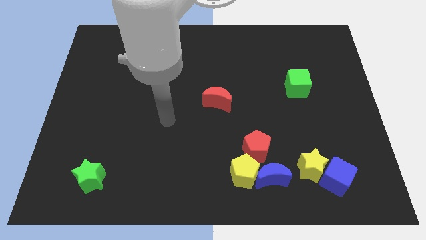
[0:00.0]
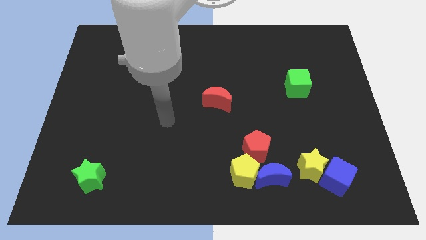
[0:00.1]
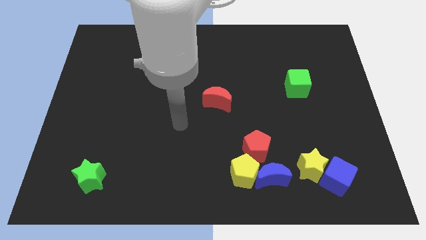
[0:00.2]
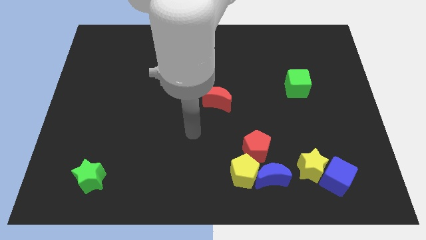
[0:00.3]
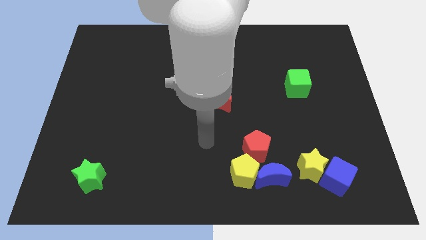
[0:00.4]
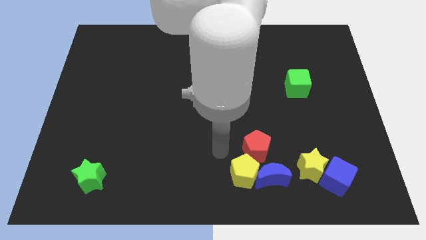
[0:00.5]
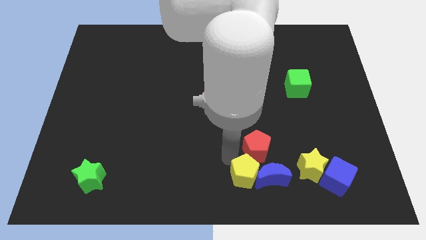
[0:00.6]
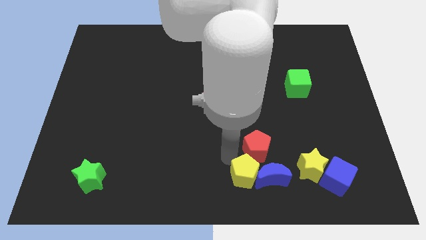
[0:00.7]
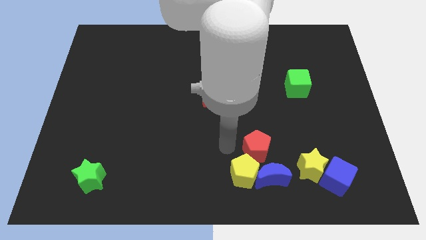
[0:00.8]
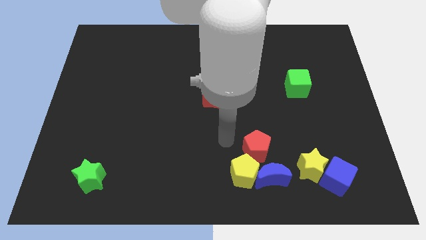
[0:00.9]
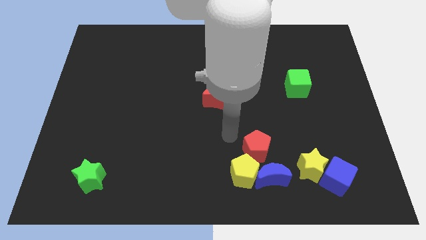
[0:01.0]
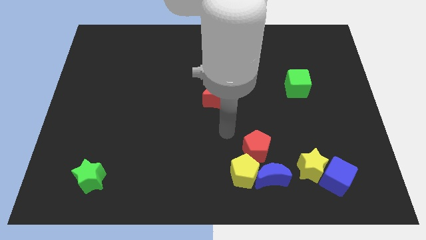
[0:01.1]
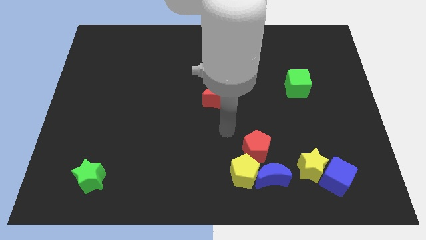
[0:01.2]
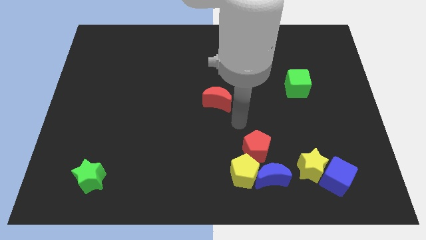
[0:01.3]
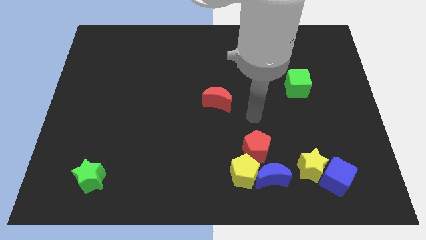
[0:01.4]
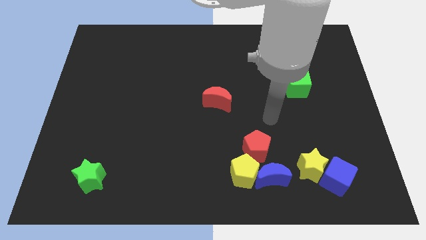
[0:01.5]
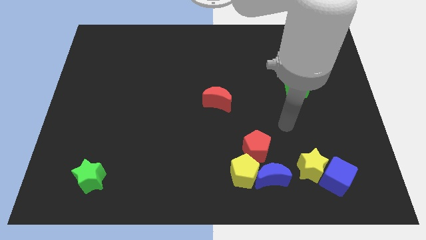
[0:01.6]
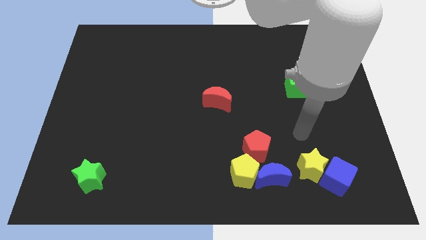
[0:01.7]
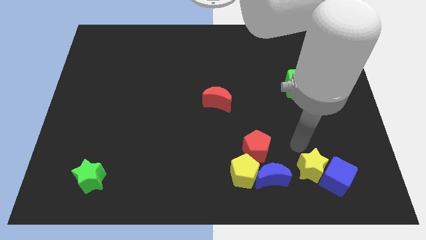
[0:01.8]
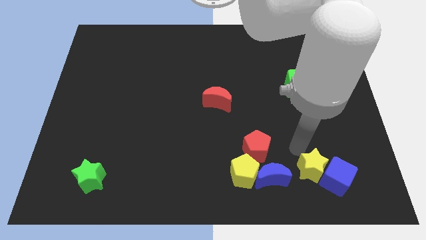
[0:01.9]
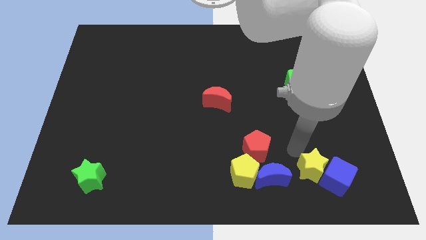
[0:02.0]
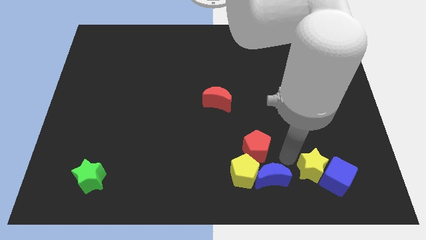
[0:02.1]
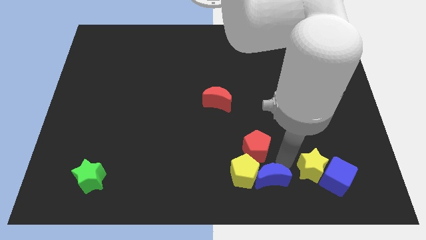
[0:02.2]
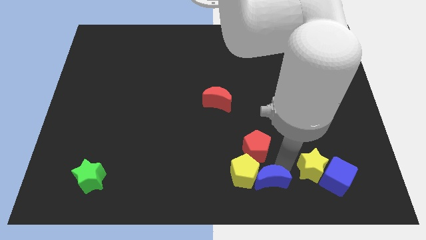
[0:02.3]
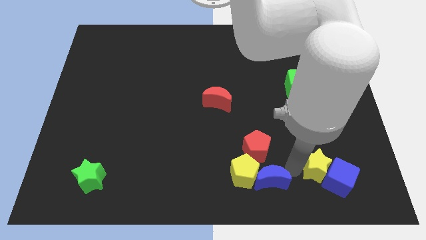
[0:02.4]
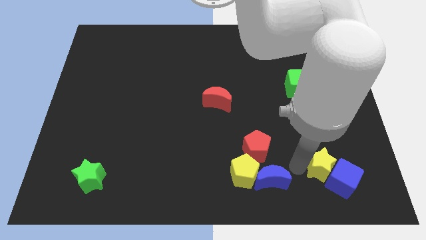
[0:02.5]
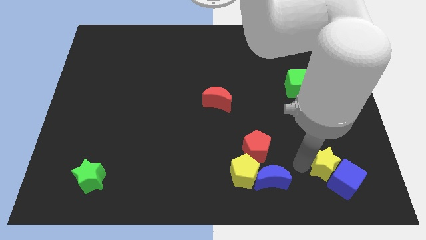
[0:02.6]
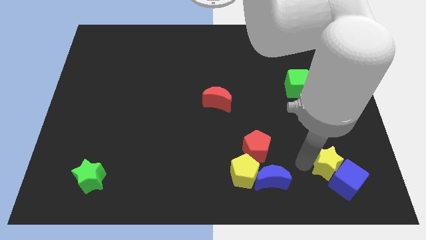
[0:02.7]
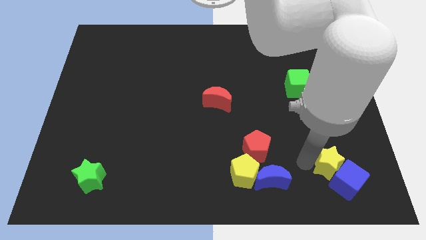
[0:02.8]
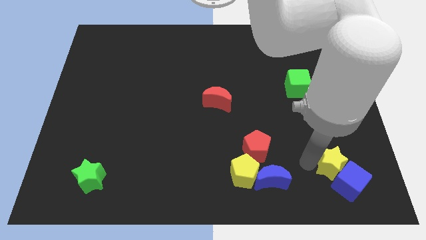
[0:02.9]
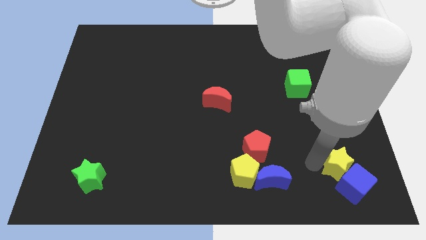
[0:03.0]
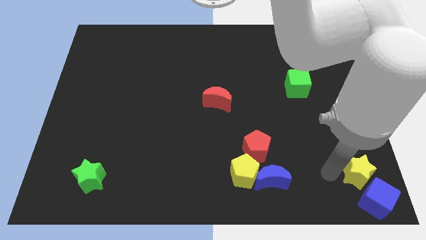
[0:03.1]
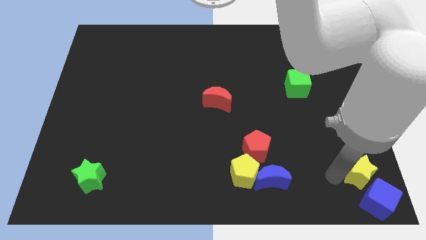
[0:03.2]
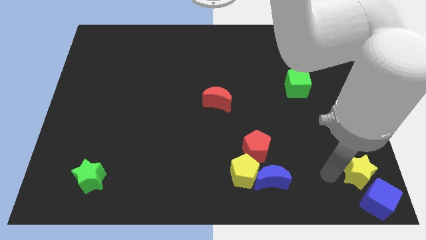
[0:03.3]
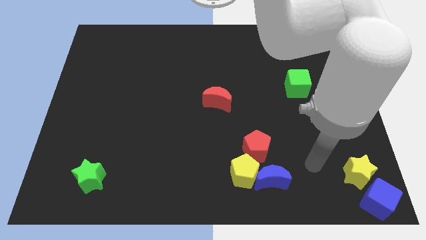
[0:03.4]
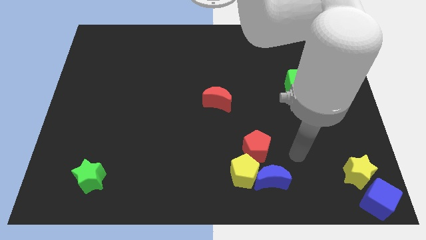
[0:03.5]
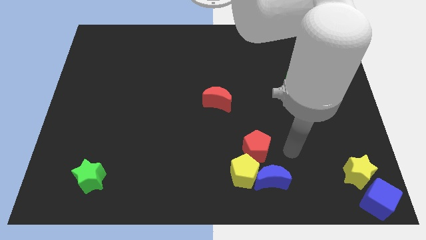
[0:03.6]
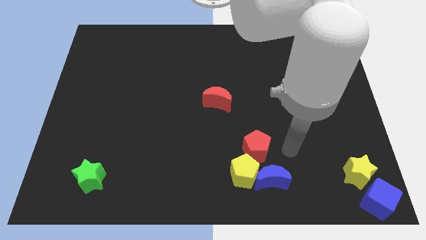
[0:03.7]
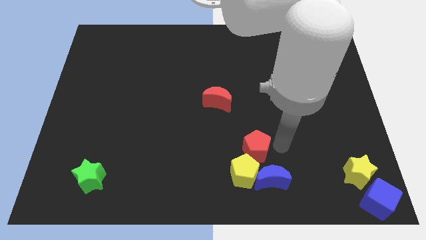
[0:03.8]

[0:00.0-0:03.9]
push the yellow star and the blue cube to the bottom right corner

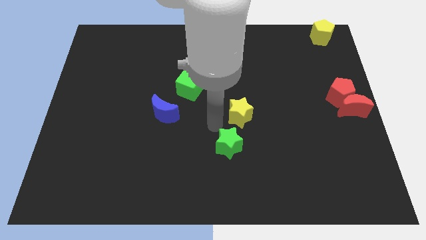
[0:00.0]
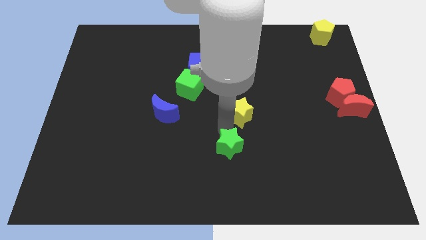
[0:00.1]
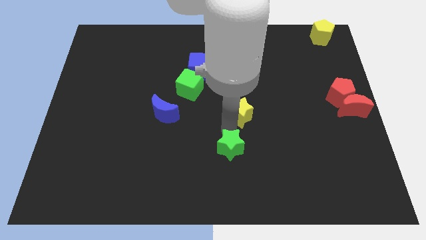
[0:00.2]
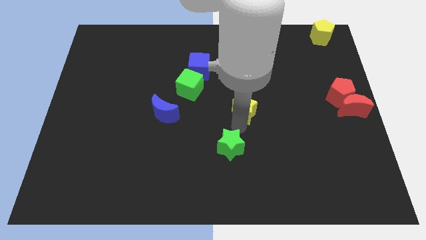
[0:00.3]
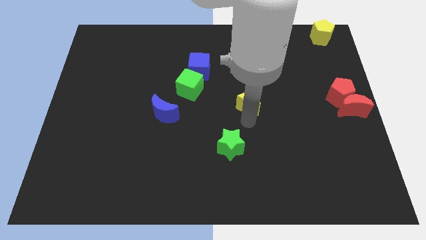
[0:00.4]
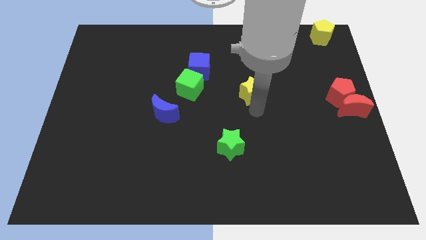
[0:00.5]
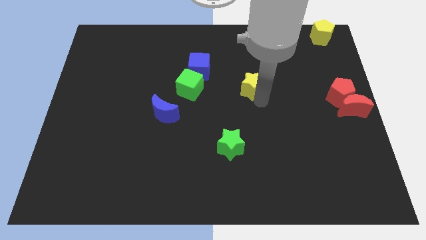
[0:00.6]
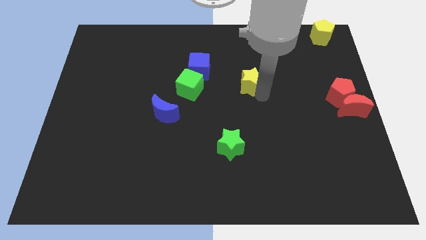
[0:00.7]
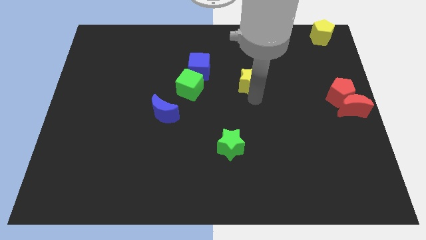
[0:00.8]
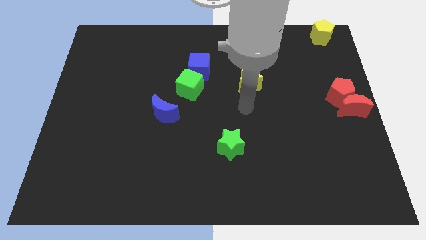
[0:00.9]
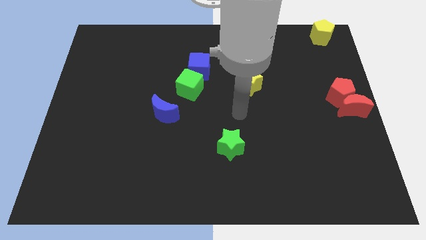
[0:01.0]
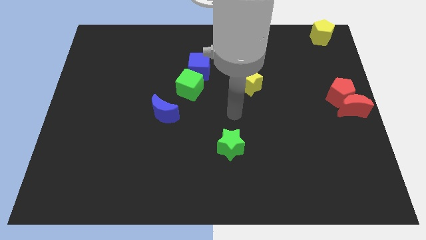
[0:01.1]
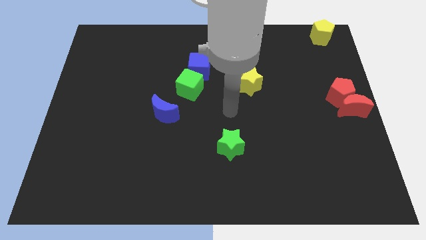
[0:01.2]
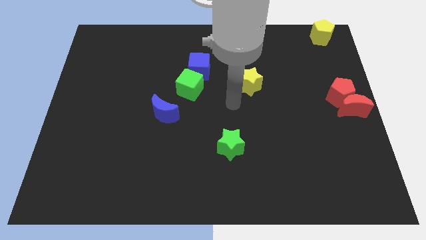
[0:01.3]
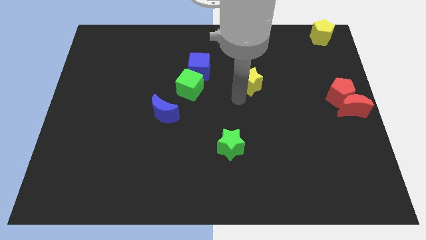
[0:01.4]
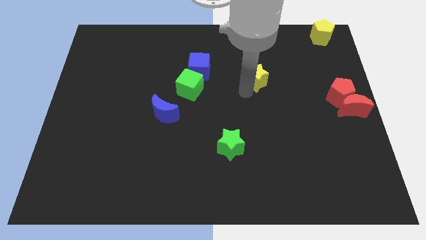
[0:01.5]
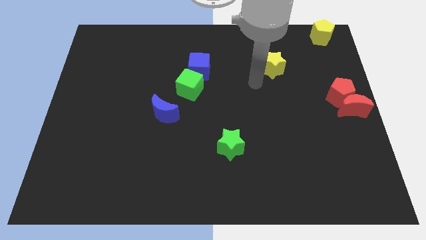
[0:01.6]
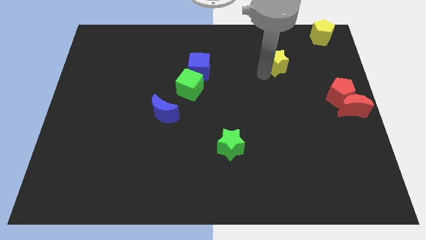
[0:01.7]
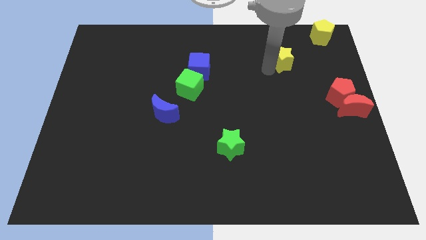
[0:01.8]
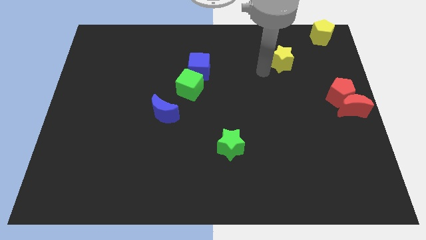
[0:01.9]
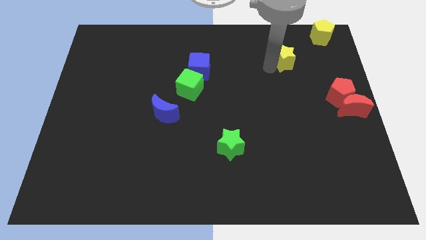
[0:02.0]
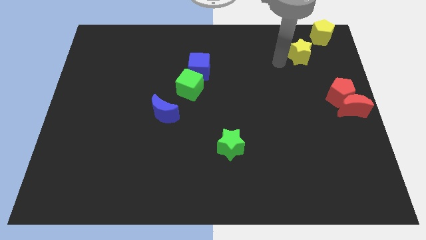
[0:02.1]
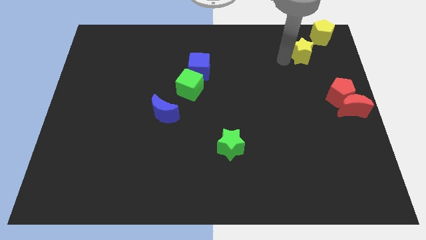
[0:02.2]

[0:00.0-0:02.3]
move the yellow star to the bottom left of the yellow pentagon

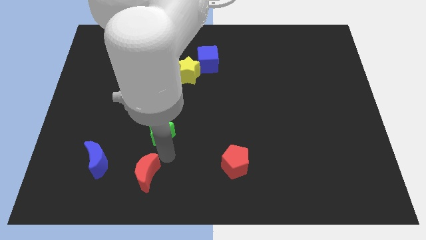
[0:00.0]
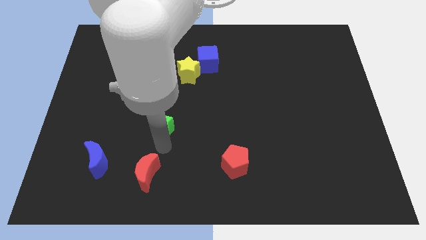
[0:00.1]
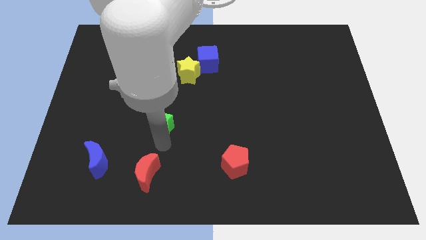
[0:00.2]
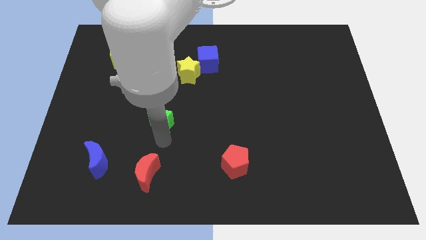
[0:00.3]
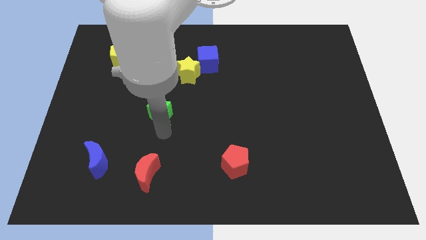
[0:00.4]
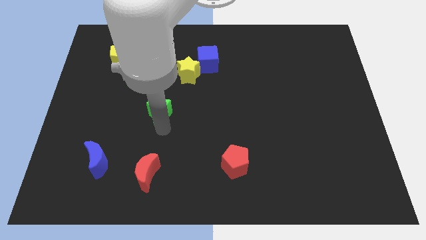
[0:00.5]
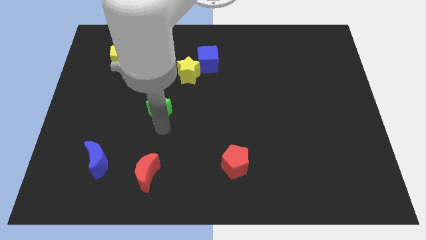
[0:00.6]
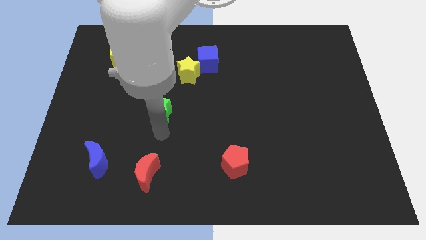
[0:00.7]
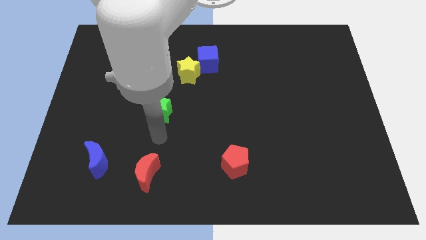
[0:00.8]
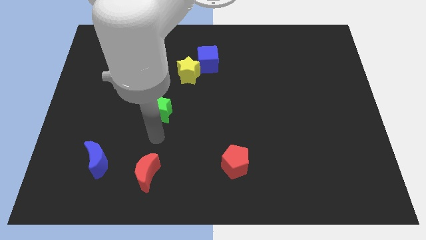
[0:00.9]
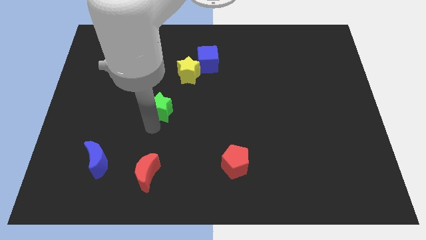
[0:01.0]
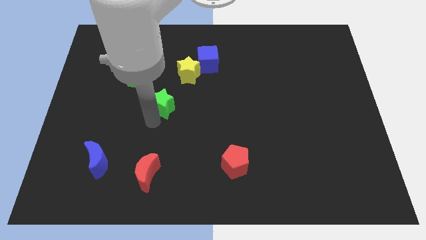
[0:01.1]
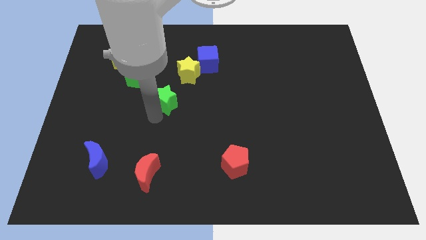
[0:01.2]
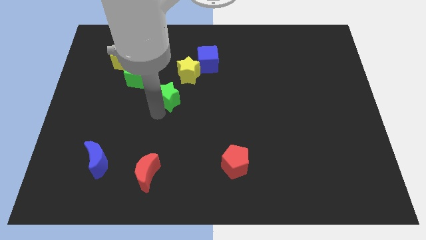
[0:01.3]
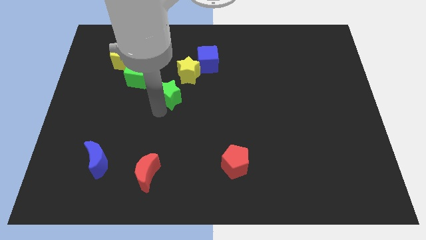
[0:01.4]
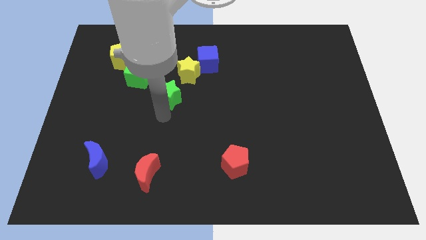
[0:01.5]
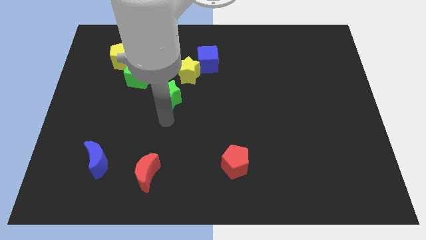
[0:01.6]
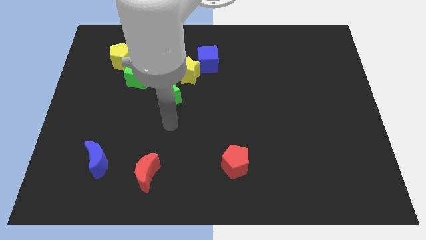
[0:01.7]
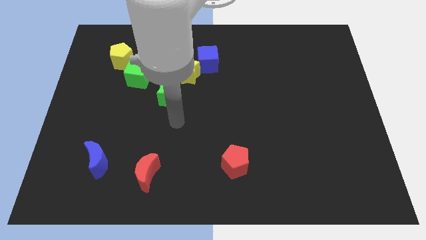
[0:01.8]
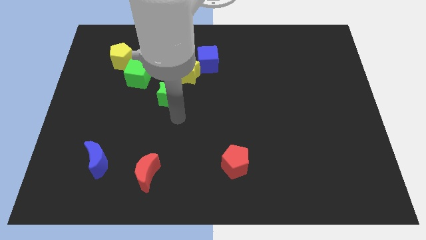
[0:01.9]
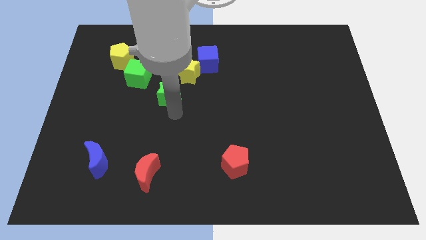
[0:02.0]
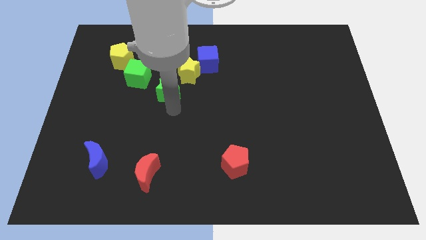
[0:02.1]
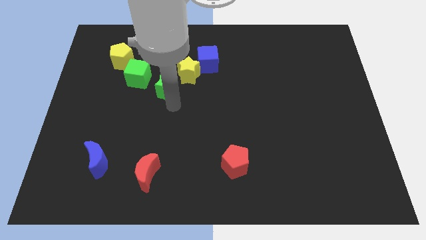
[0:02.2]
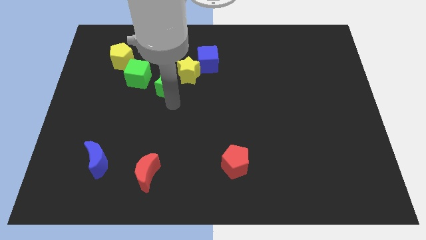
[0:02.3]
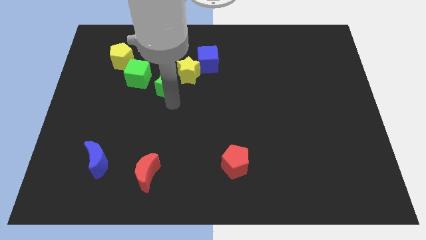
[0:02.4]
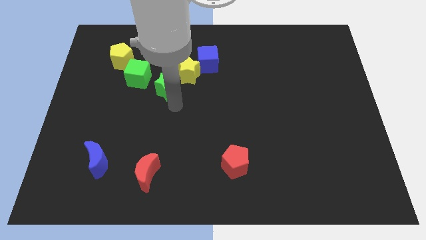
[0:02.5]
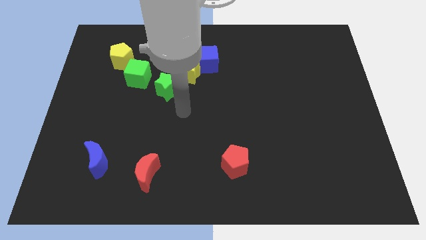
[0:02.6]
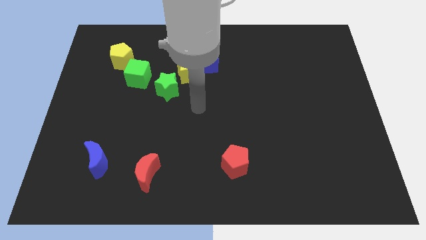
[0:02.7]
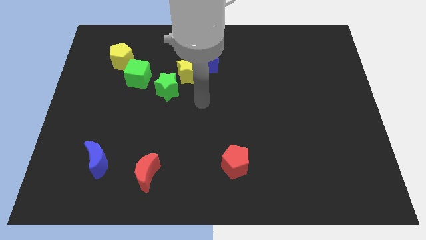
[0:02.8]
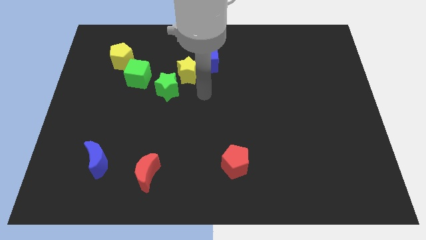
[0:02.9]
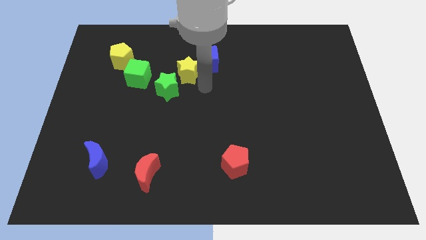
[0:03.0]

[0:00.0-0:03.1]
slide green star upward to the bottom right of green cube
